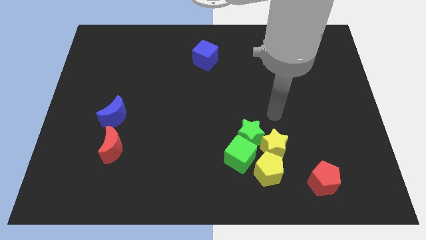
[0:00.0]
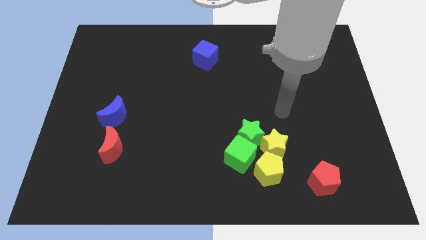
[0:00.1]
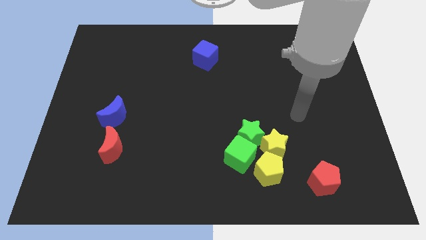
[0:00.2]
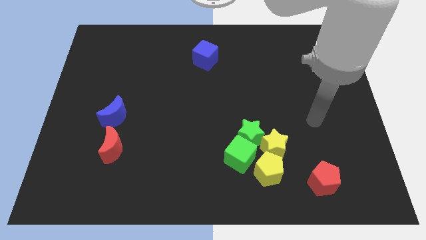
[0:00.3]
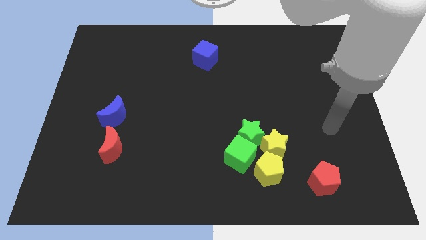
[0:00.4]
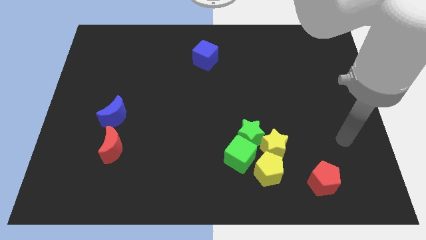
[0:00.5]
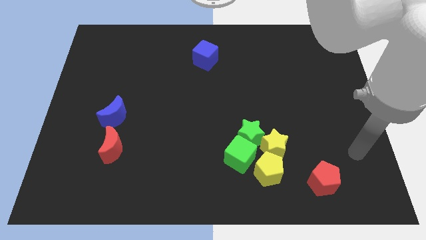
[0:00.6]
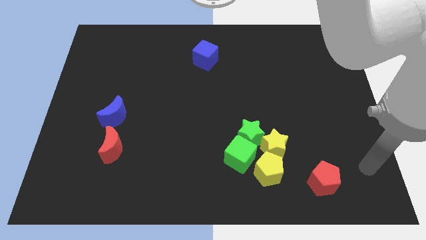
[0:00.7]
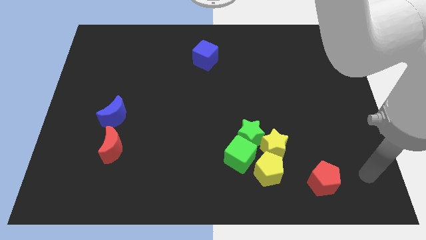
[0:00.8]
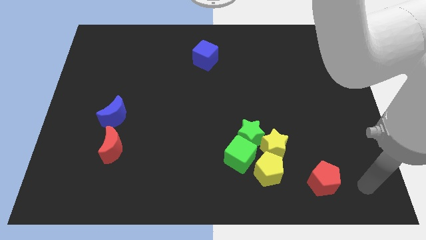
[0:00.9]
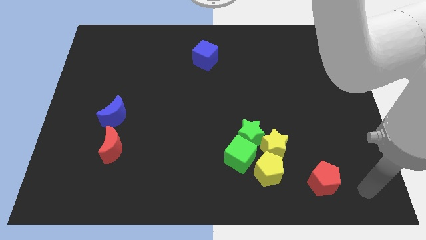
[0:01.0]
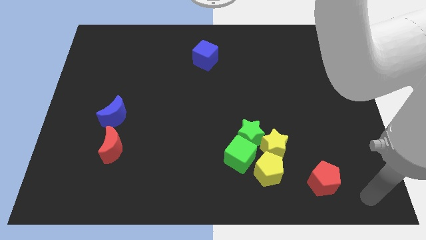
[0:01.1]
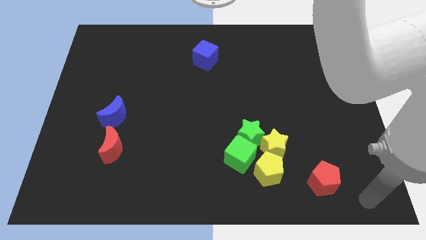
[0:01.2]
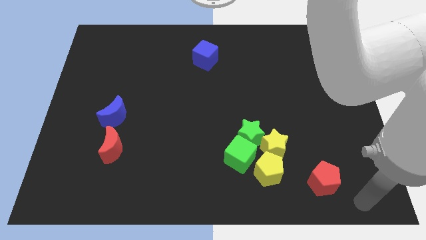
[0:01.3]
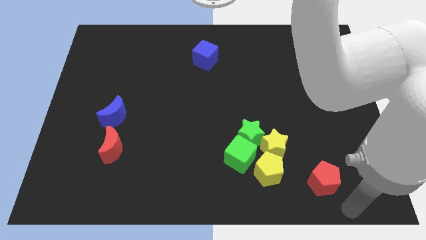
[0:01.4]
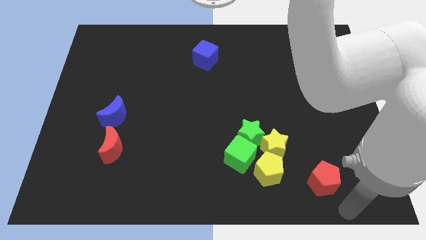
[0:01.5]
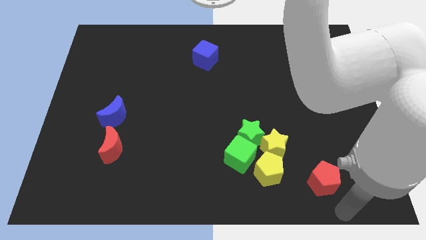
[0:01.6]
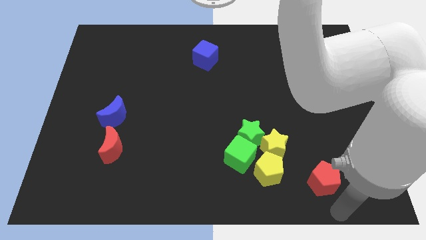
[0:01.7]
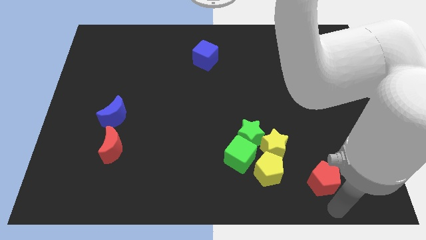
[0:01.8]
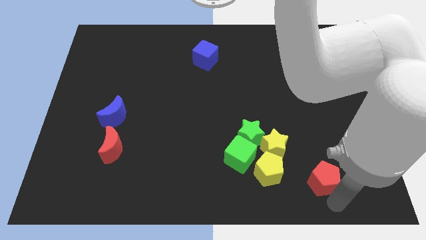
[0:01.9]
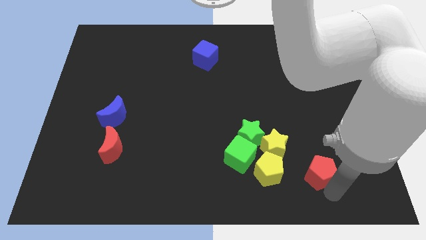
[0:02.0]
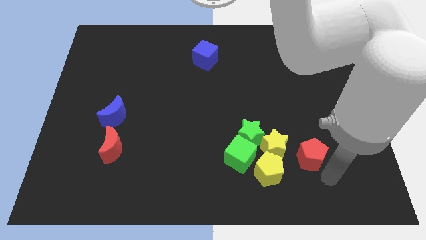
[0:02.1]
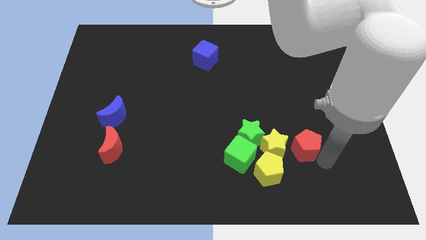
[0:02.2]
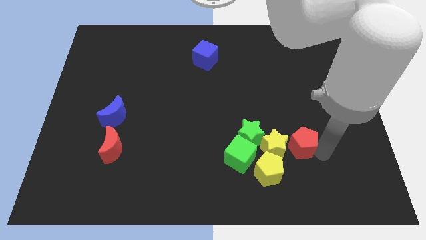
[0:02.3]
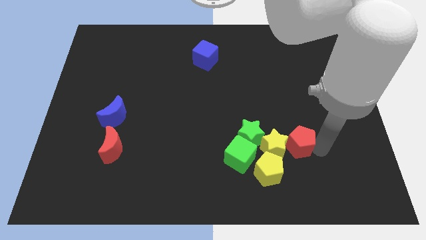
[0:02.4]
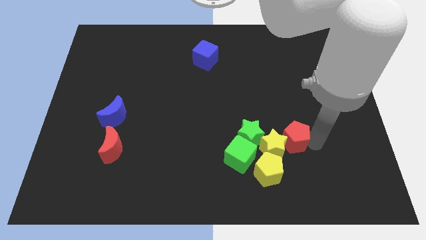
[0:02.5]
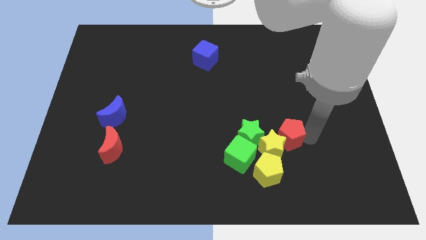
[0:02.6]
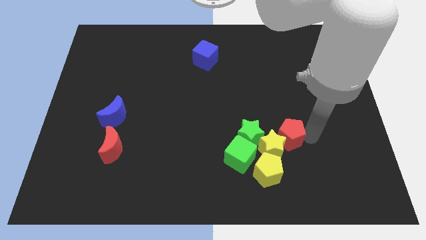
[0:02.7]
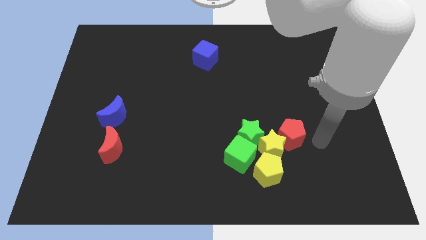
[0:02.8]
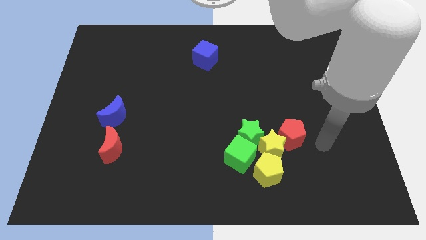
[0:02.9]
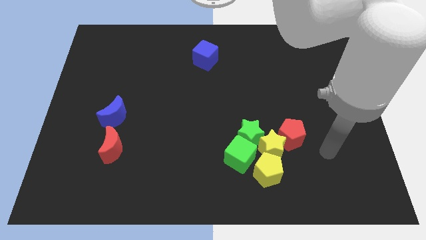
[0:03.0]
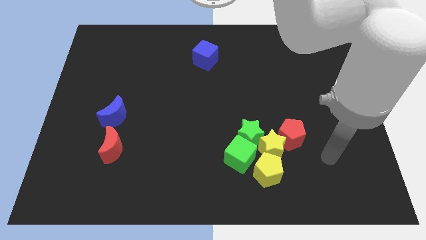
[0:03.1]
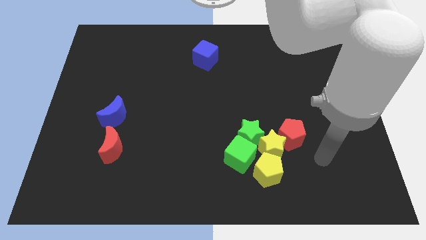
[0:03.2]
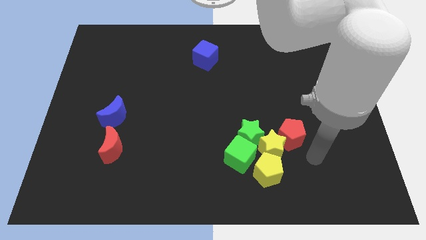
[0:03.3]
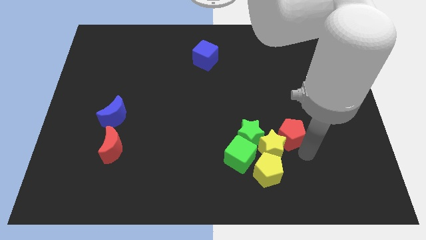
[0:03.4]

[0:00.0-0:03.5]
push the red pentagon into the yellow star

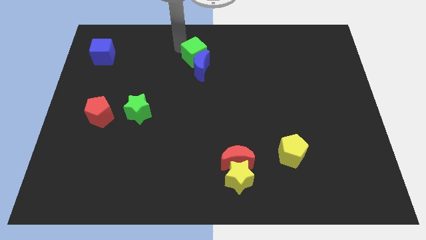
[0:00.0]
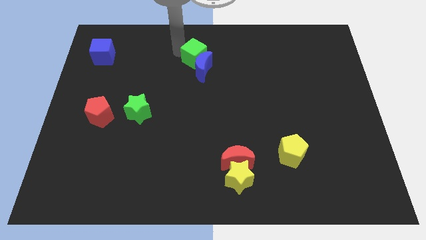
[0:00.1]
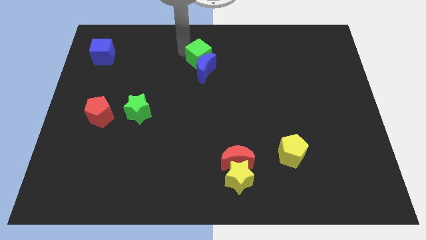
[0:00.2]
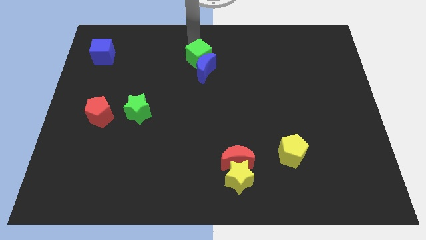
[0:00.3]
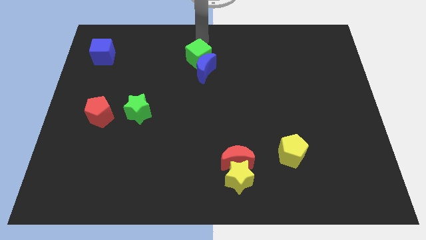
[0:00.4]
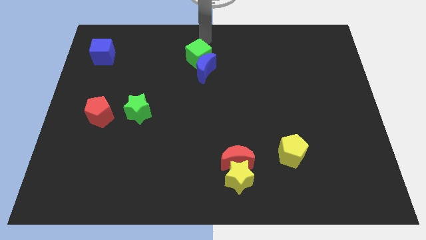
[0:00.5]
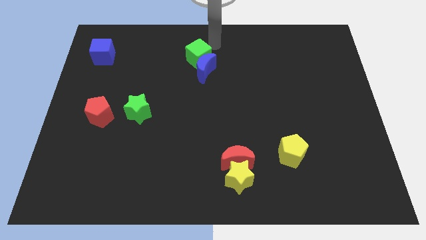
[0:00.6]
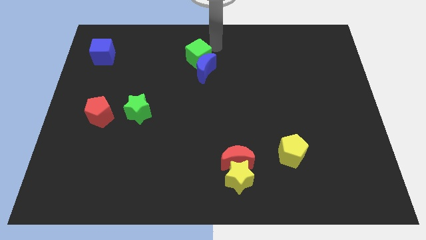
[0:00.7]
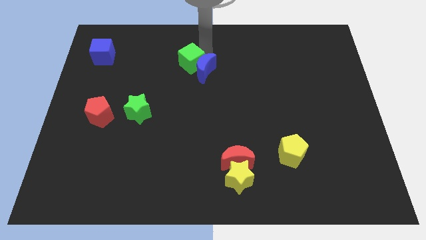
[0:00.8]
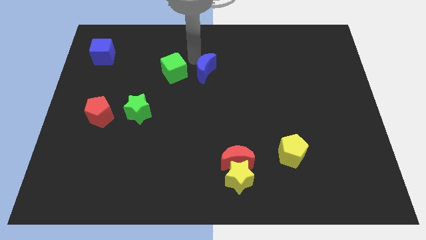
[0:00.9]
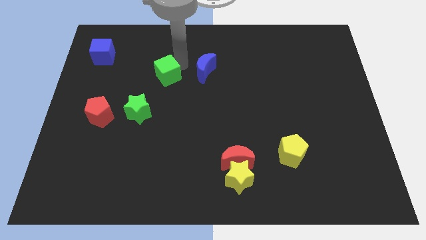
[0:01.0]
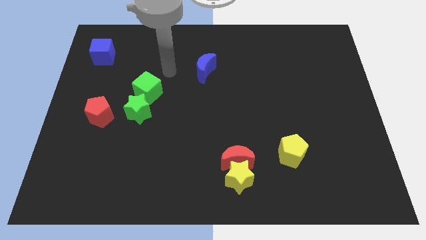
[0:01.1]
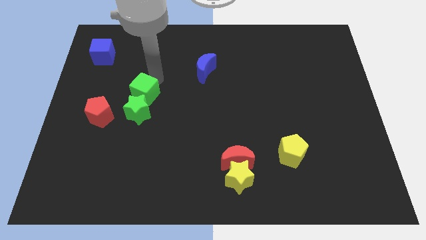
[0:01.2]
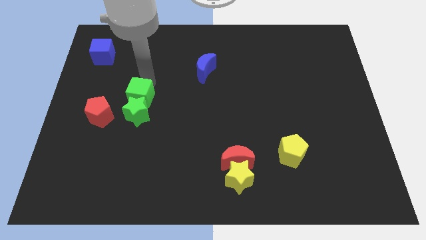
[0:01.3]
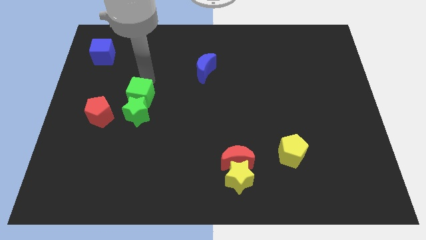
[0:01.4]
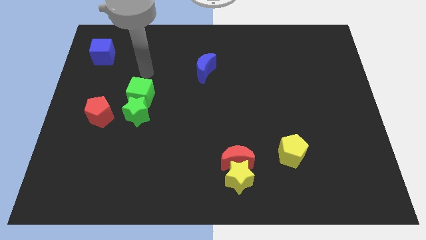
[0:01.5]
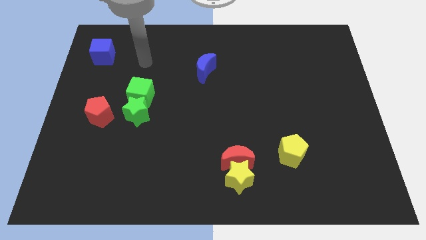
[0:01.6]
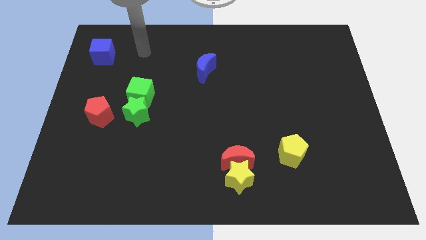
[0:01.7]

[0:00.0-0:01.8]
place the green cube top of the green star

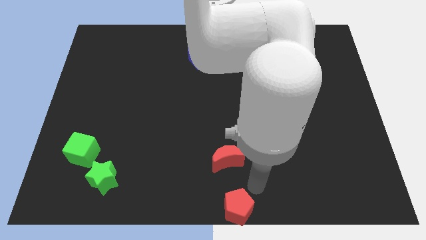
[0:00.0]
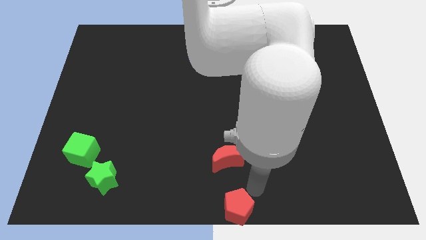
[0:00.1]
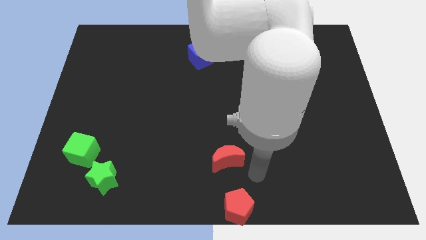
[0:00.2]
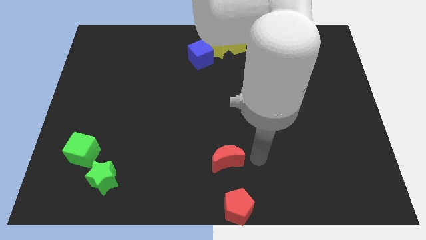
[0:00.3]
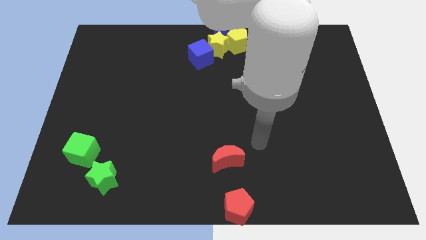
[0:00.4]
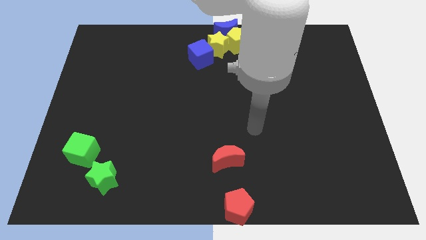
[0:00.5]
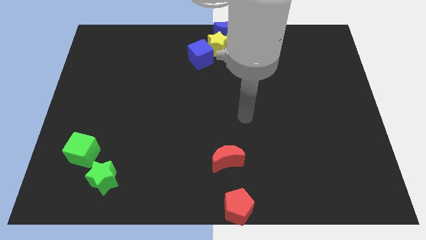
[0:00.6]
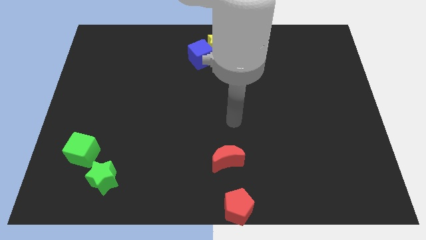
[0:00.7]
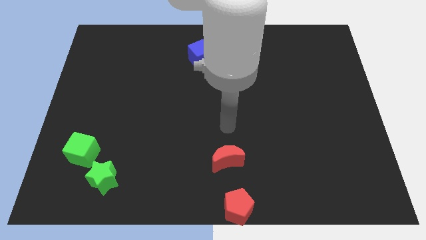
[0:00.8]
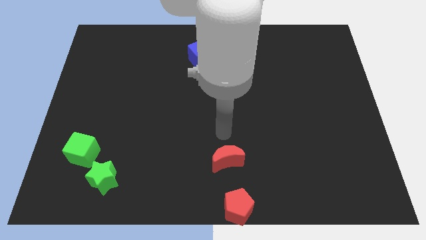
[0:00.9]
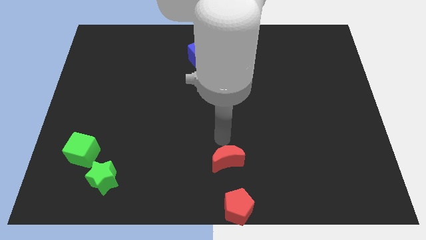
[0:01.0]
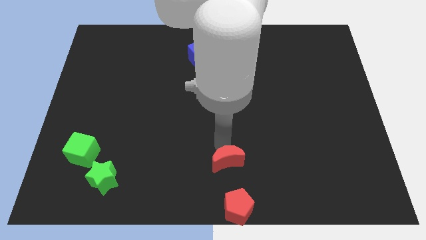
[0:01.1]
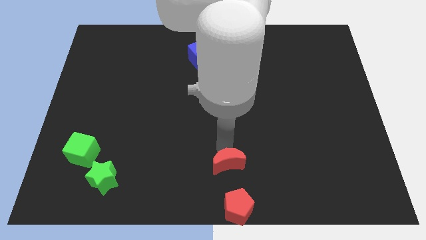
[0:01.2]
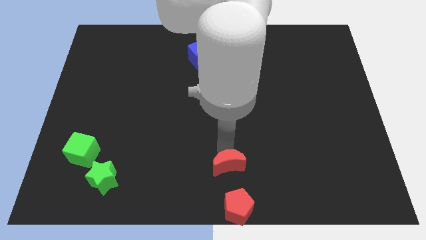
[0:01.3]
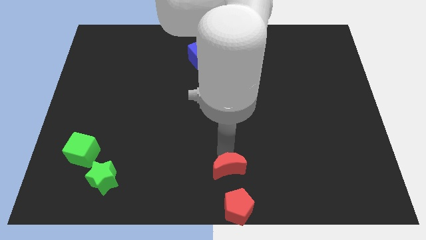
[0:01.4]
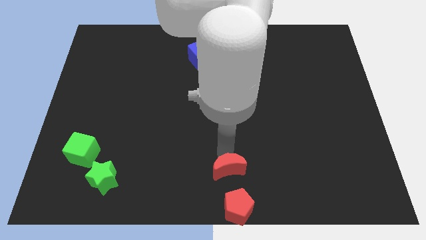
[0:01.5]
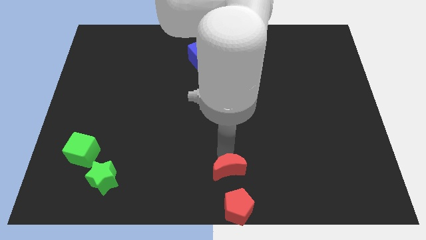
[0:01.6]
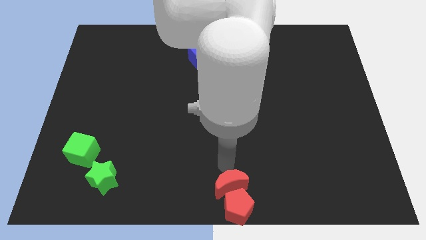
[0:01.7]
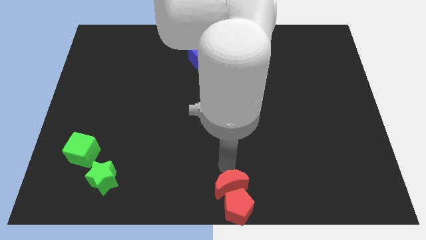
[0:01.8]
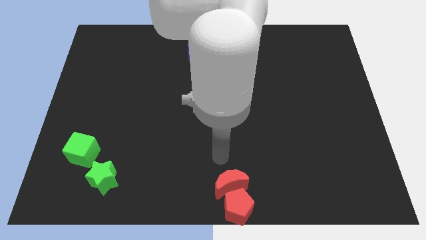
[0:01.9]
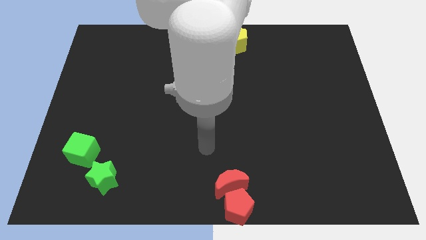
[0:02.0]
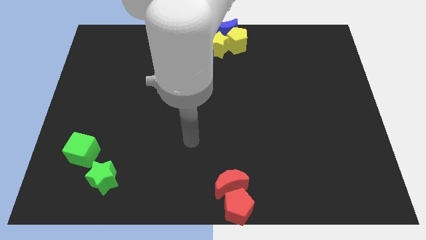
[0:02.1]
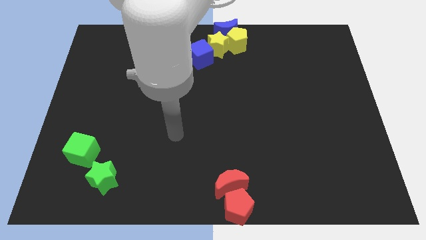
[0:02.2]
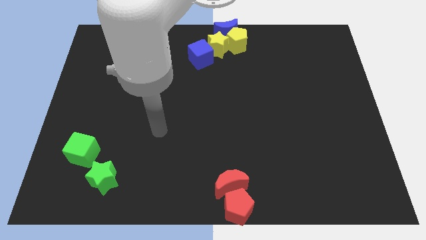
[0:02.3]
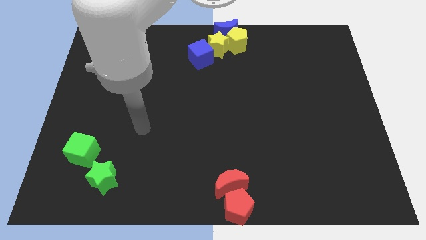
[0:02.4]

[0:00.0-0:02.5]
place the red crescent close to the red pentagon

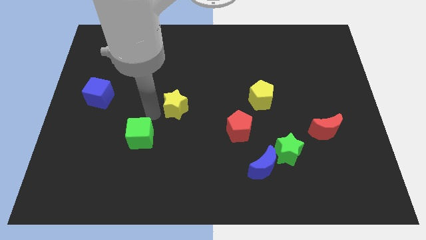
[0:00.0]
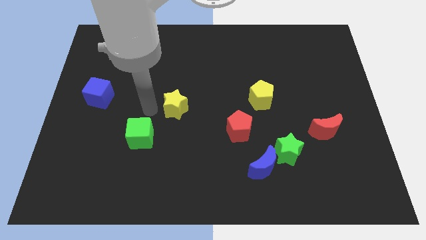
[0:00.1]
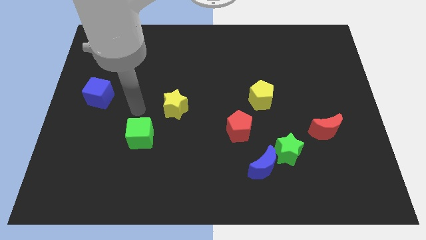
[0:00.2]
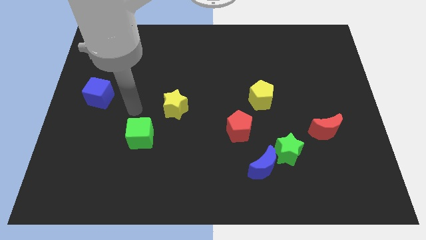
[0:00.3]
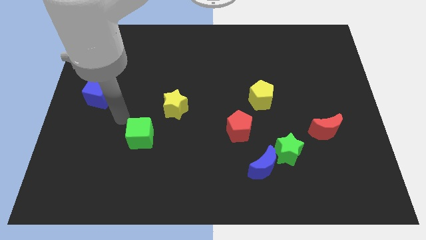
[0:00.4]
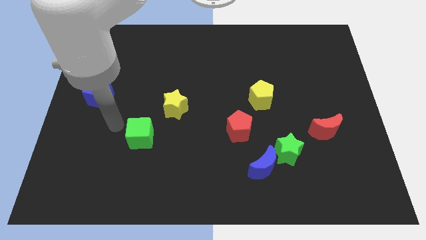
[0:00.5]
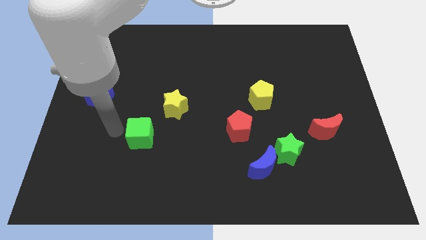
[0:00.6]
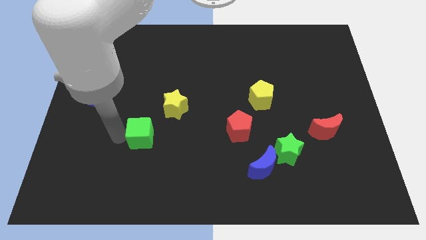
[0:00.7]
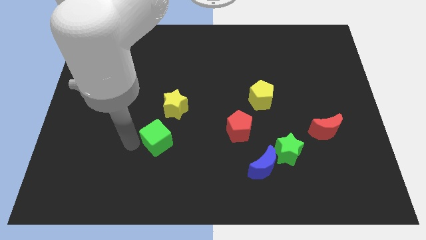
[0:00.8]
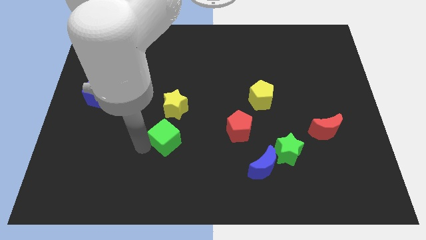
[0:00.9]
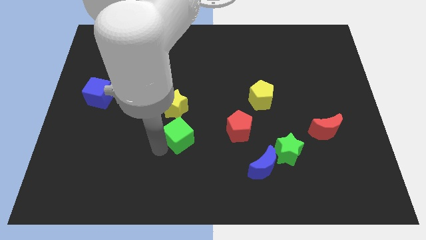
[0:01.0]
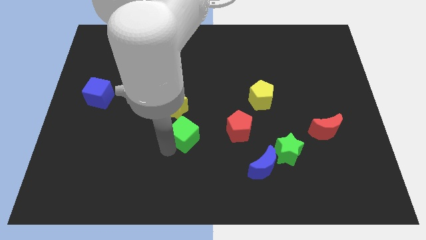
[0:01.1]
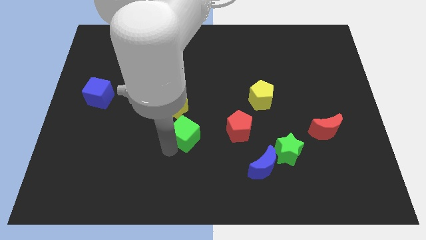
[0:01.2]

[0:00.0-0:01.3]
place the green cube below the yellow star

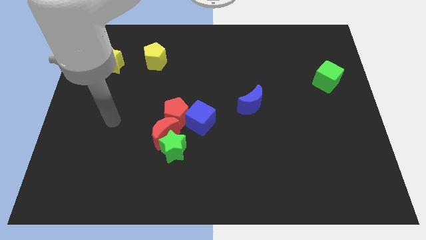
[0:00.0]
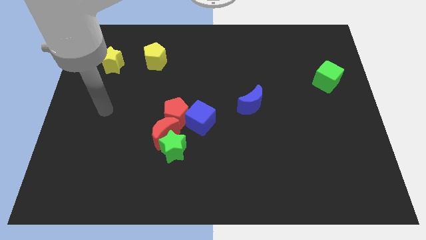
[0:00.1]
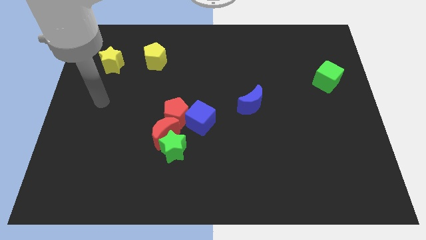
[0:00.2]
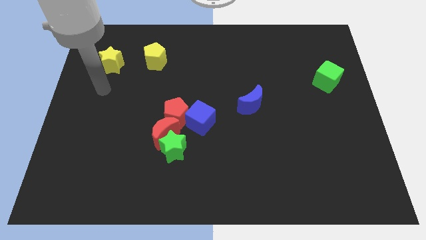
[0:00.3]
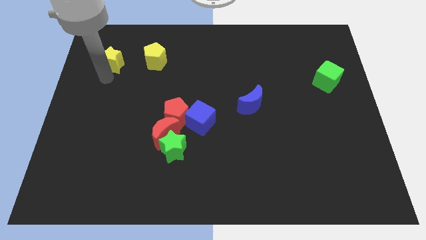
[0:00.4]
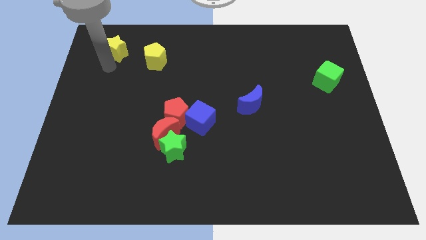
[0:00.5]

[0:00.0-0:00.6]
touch the bottom of yellow star
